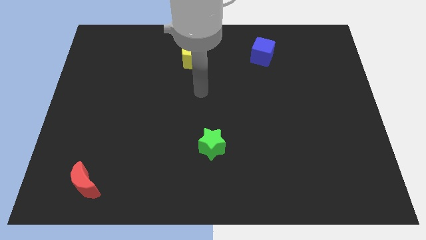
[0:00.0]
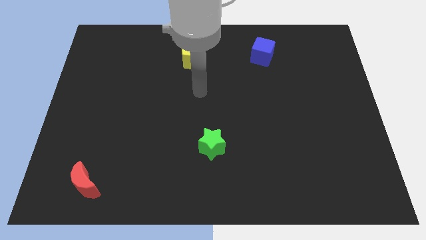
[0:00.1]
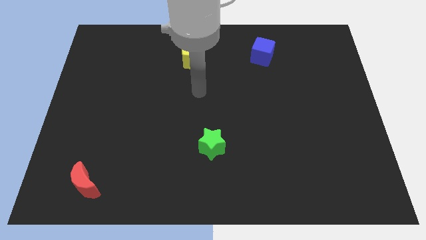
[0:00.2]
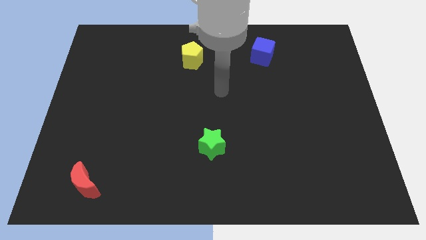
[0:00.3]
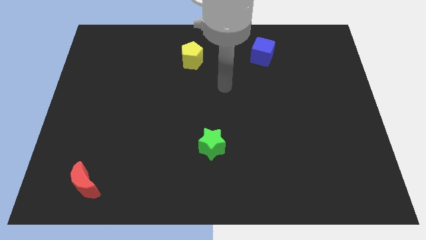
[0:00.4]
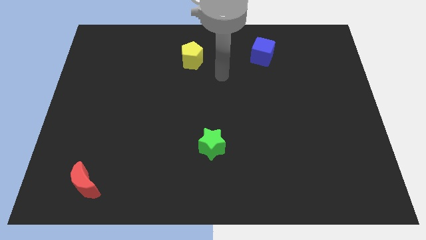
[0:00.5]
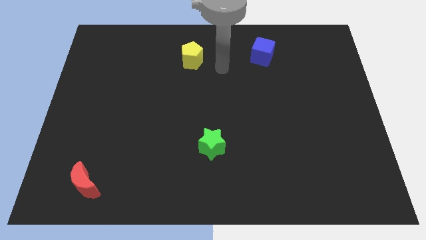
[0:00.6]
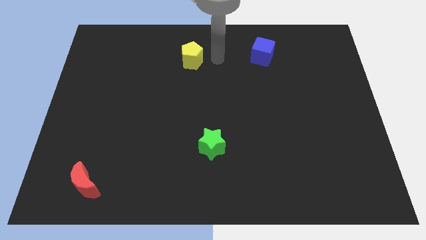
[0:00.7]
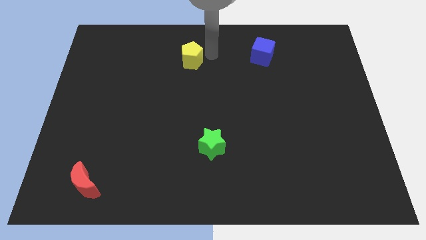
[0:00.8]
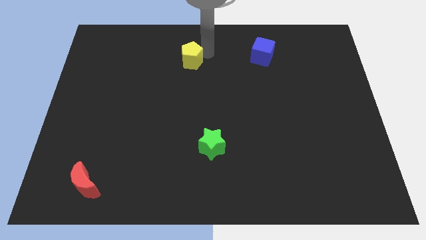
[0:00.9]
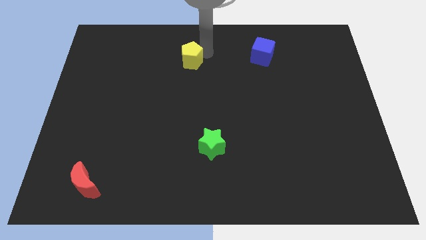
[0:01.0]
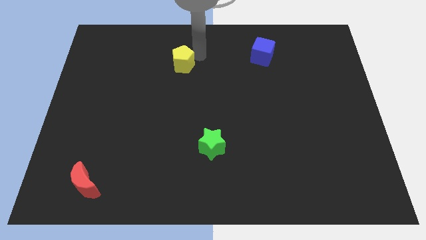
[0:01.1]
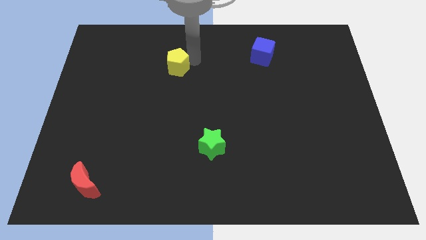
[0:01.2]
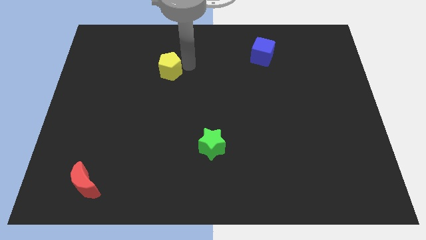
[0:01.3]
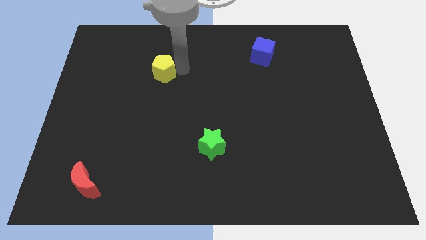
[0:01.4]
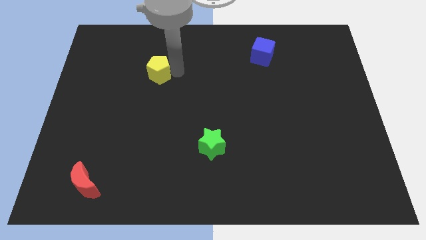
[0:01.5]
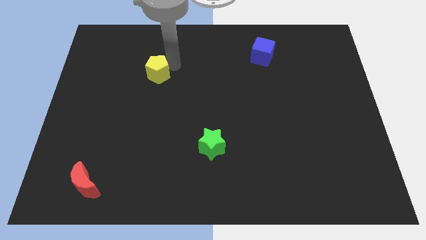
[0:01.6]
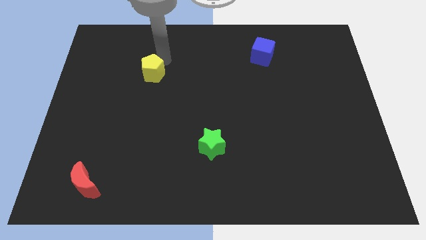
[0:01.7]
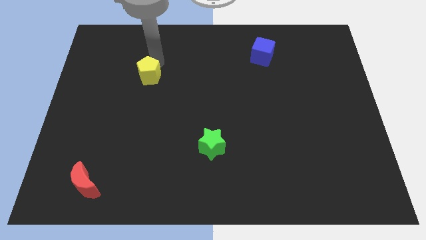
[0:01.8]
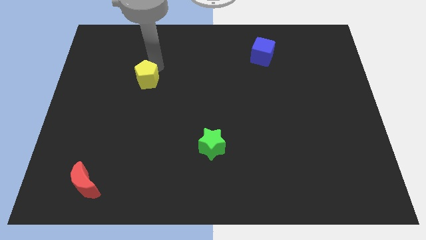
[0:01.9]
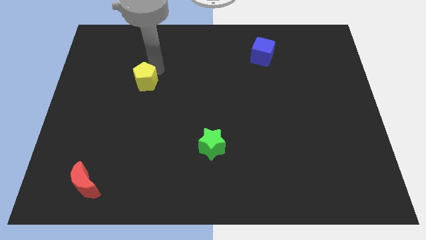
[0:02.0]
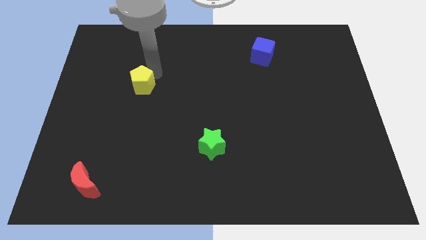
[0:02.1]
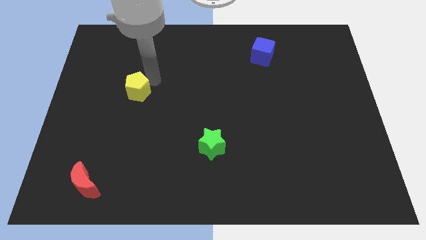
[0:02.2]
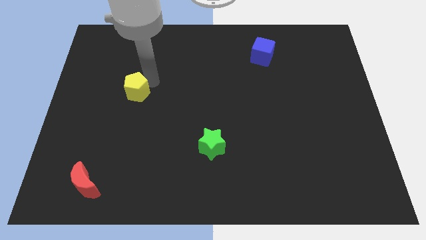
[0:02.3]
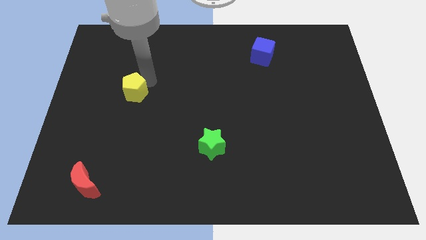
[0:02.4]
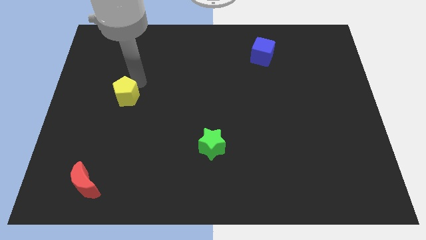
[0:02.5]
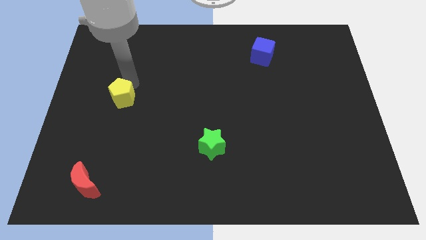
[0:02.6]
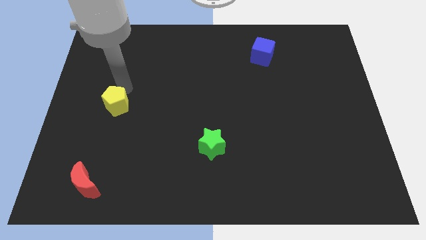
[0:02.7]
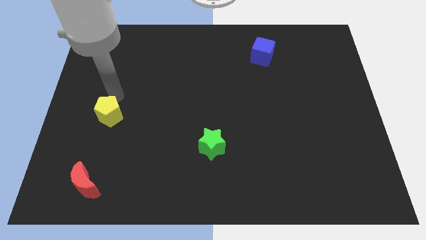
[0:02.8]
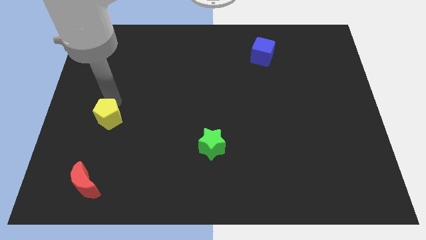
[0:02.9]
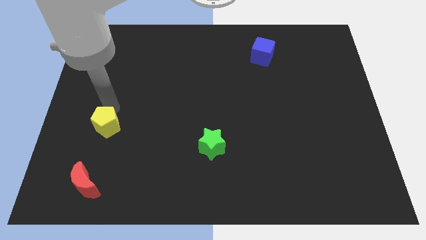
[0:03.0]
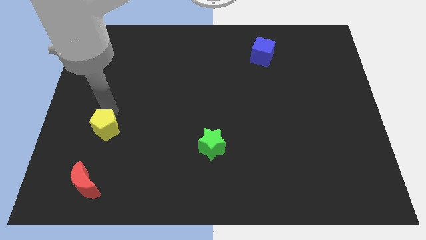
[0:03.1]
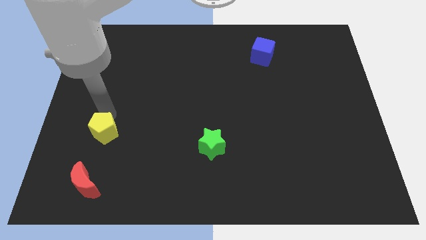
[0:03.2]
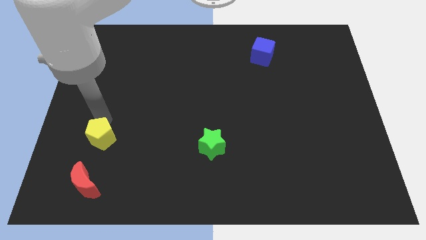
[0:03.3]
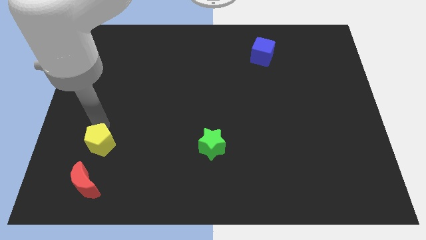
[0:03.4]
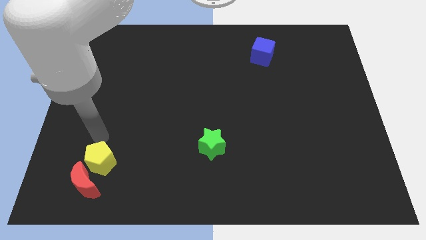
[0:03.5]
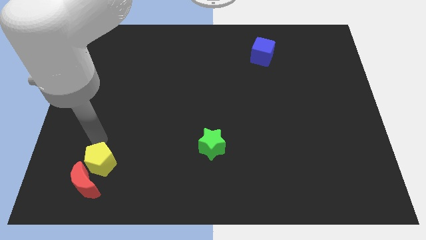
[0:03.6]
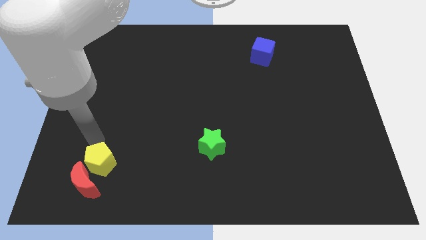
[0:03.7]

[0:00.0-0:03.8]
slide the yellow block towards the red moon

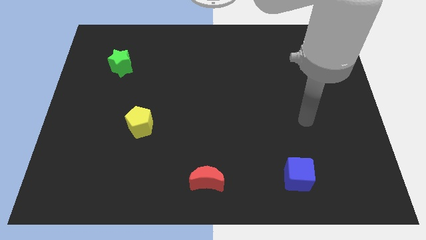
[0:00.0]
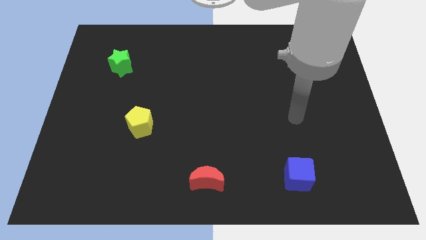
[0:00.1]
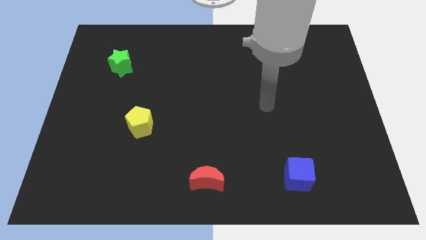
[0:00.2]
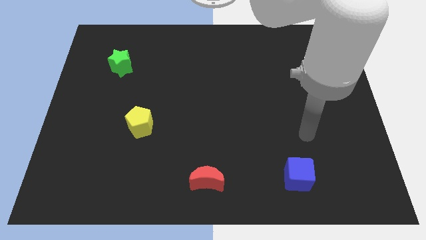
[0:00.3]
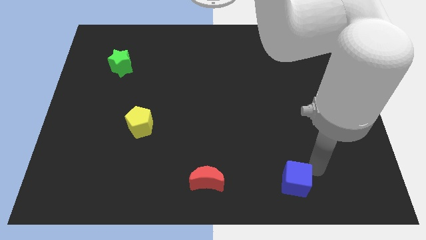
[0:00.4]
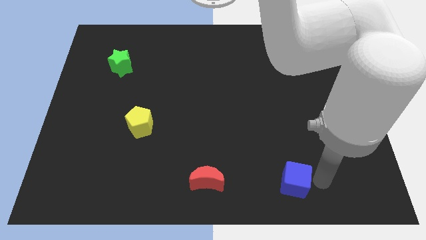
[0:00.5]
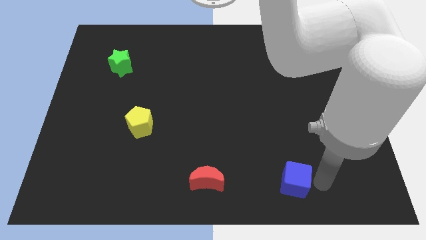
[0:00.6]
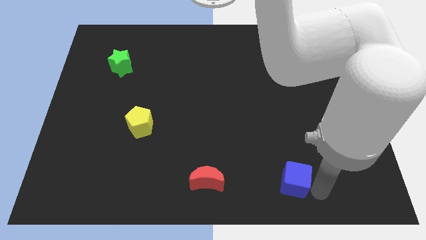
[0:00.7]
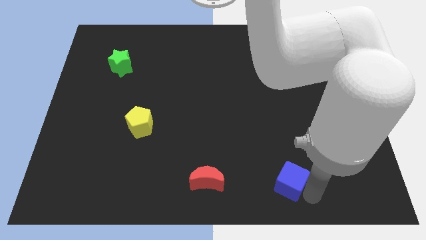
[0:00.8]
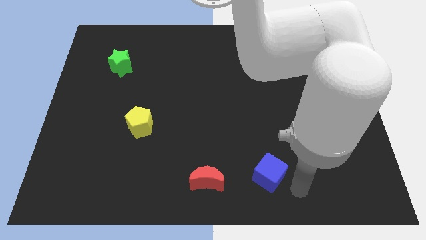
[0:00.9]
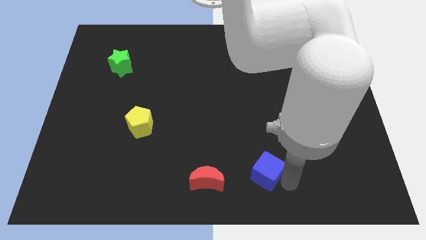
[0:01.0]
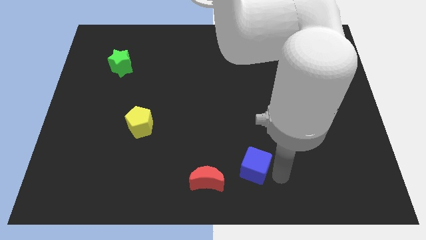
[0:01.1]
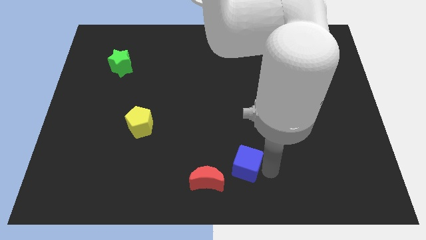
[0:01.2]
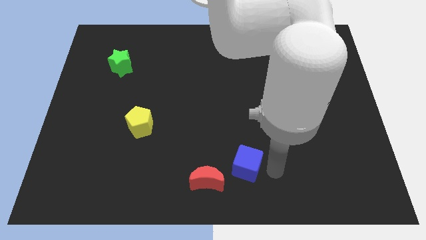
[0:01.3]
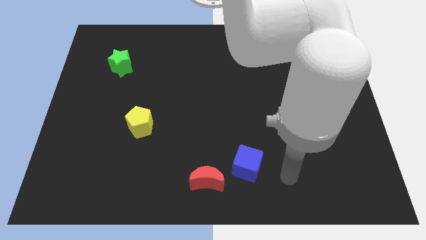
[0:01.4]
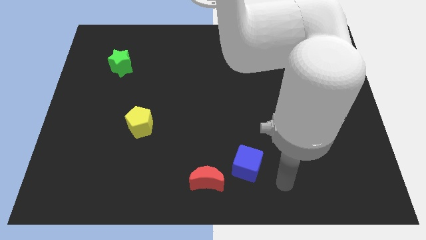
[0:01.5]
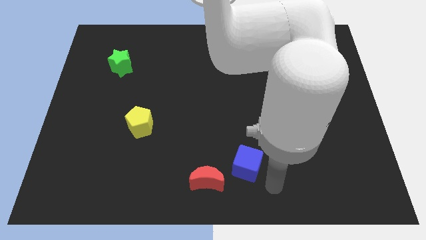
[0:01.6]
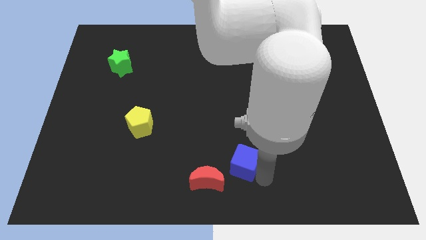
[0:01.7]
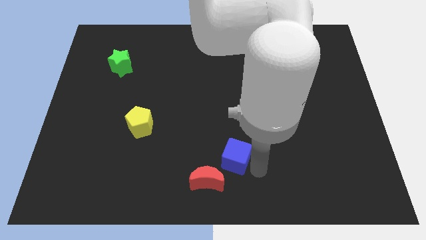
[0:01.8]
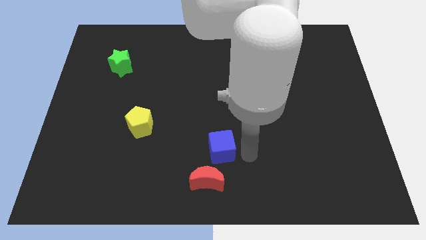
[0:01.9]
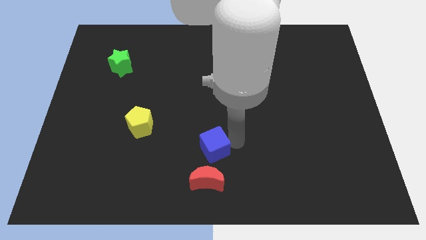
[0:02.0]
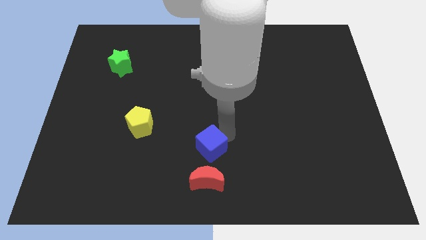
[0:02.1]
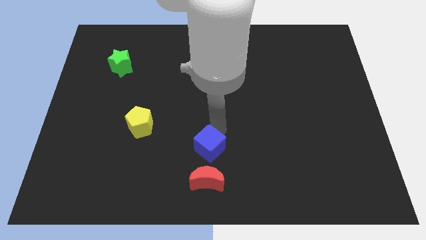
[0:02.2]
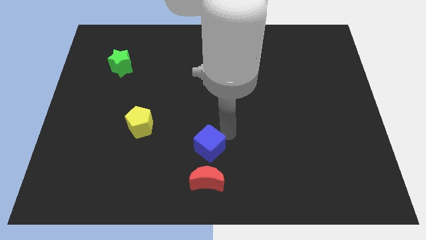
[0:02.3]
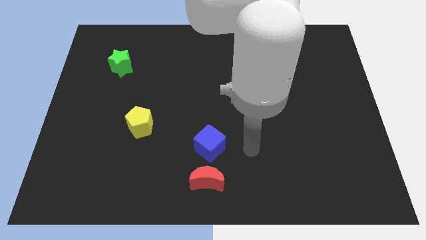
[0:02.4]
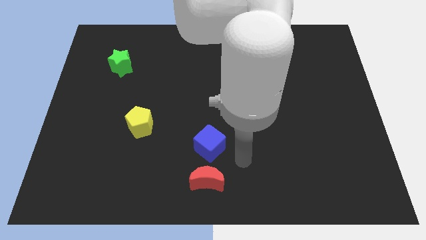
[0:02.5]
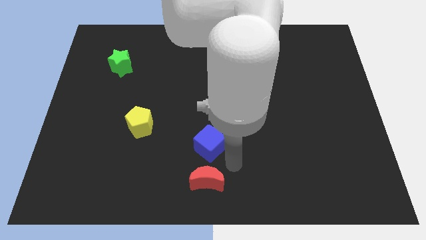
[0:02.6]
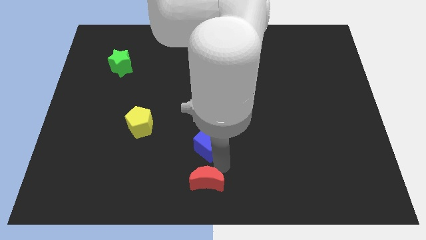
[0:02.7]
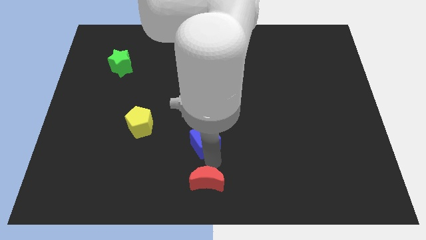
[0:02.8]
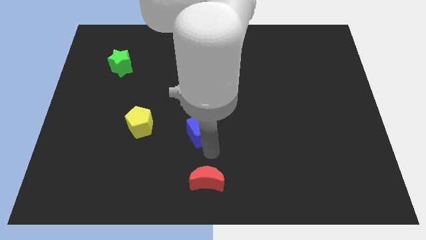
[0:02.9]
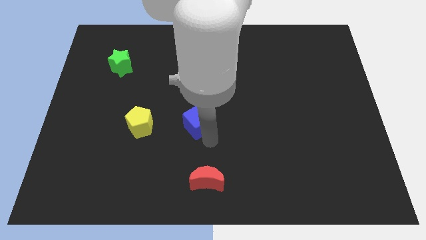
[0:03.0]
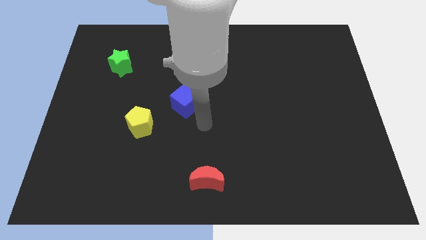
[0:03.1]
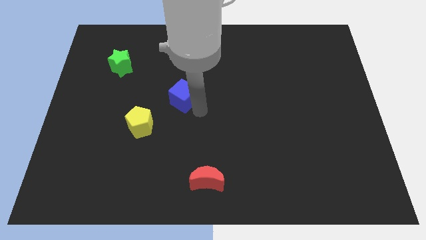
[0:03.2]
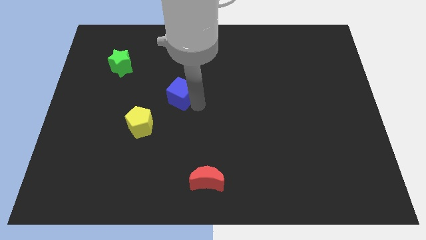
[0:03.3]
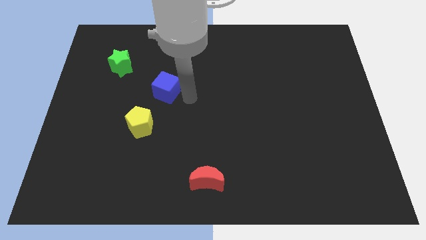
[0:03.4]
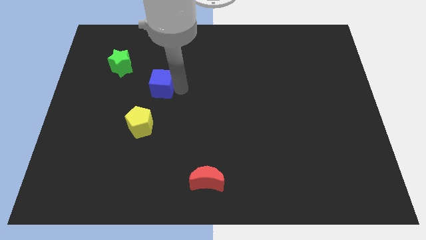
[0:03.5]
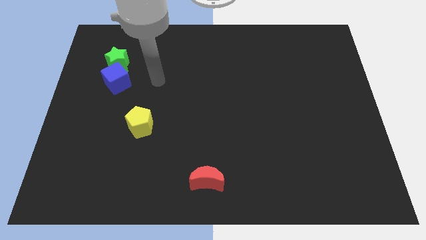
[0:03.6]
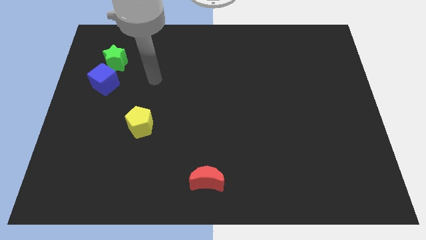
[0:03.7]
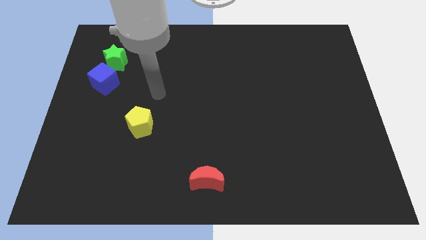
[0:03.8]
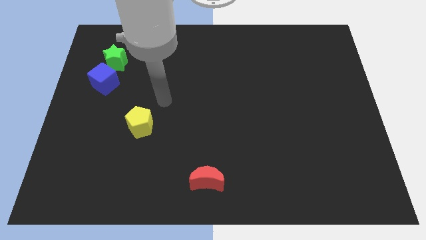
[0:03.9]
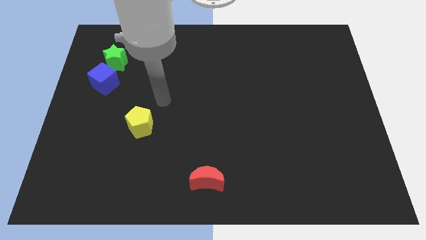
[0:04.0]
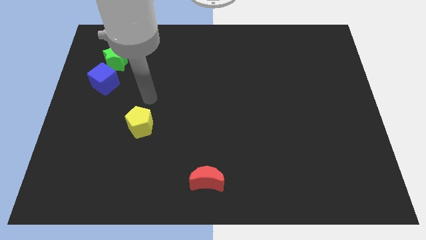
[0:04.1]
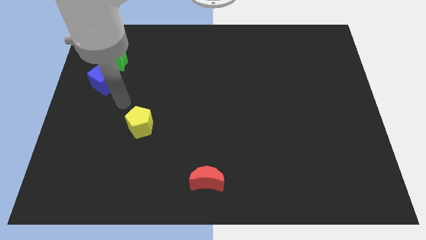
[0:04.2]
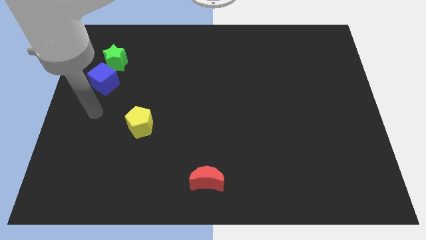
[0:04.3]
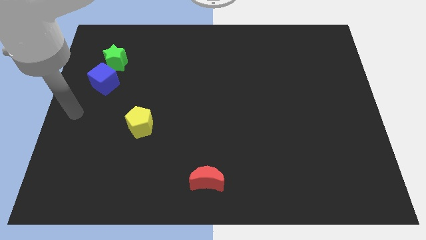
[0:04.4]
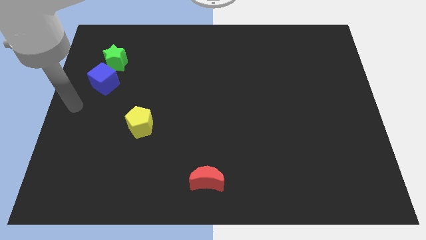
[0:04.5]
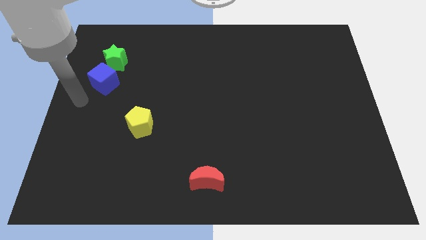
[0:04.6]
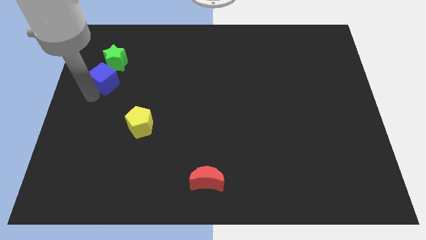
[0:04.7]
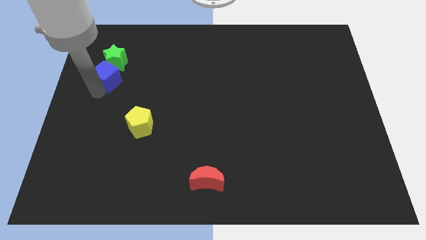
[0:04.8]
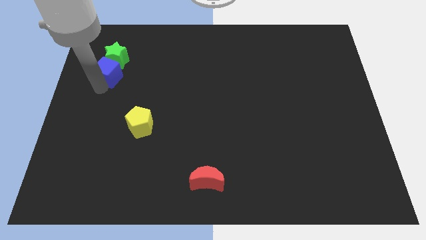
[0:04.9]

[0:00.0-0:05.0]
move the cube close to the green block
